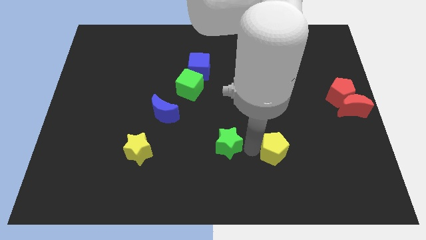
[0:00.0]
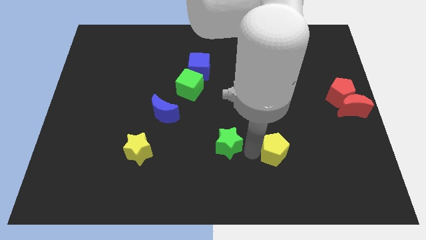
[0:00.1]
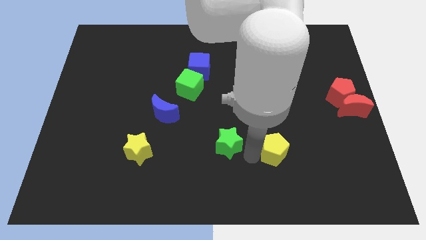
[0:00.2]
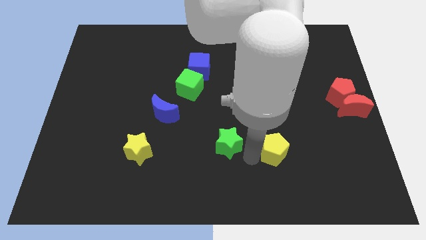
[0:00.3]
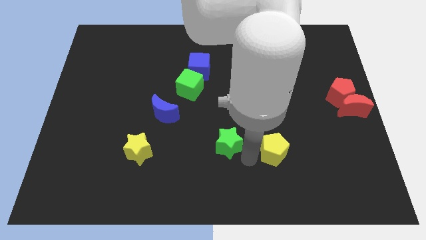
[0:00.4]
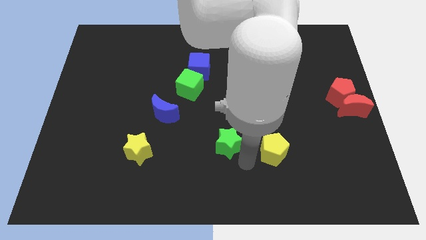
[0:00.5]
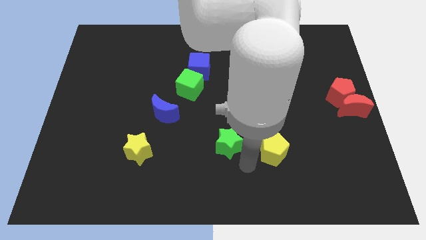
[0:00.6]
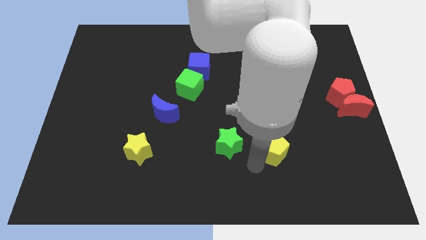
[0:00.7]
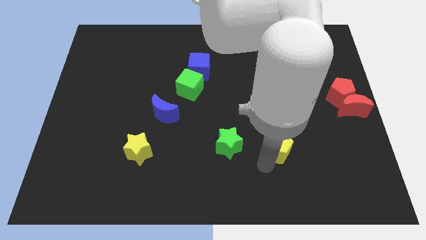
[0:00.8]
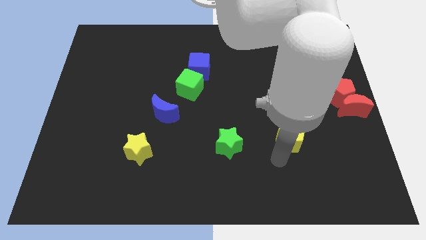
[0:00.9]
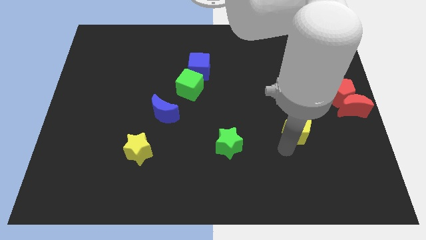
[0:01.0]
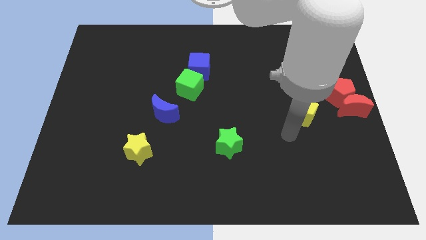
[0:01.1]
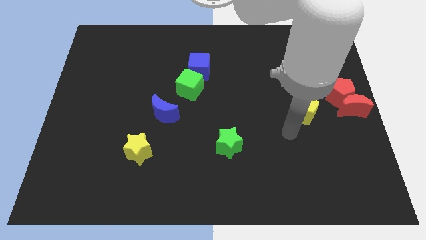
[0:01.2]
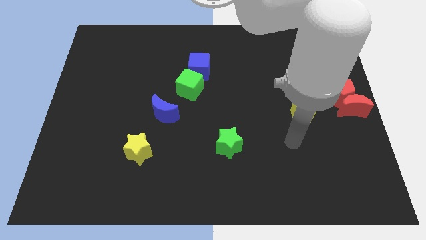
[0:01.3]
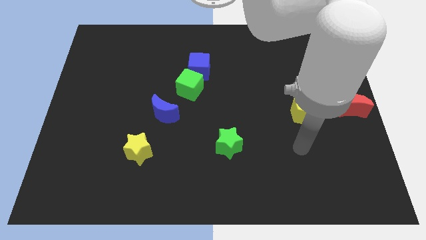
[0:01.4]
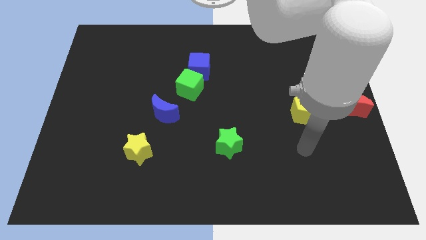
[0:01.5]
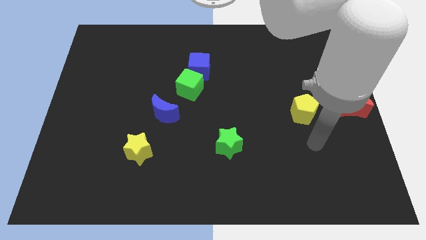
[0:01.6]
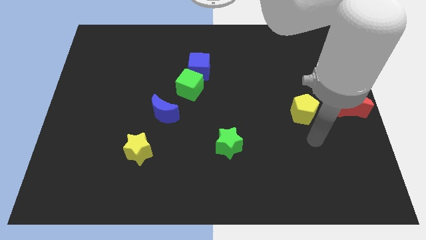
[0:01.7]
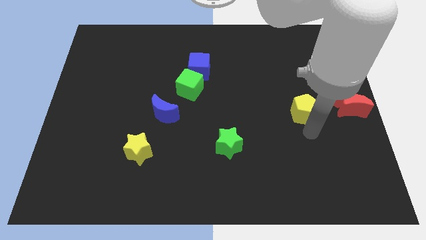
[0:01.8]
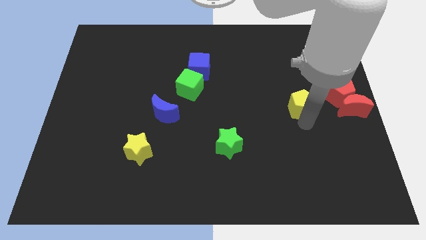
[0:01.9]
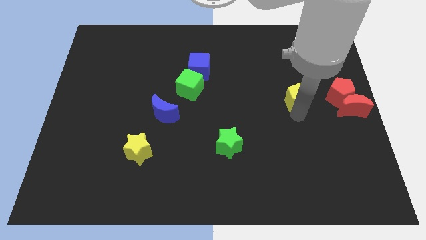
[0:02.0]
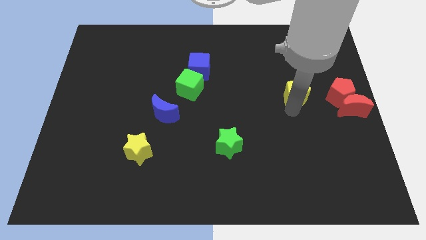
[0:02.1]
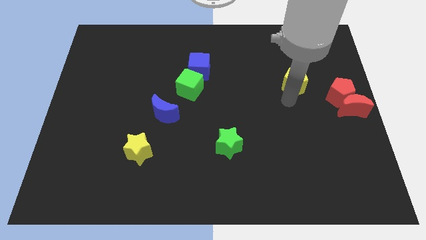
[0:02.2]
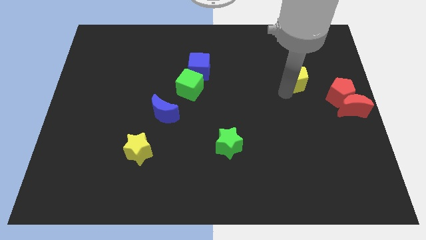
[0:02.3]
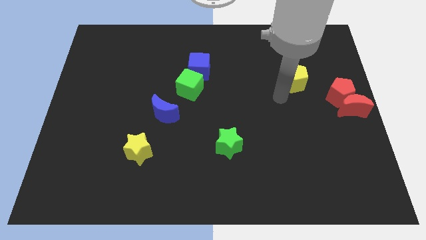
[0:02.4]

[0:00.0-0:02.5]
move the yellow pentagon on the left of the red blocks

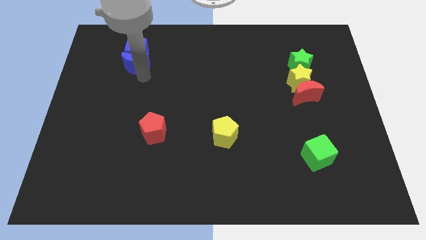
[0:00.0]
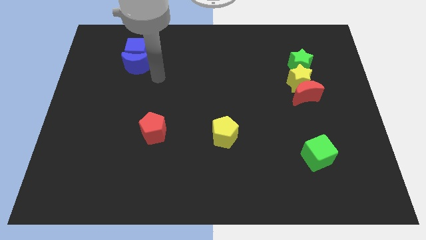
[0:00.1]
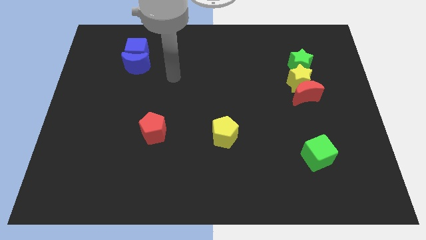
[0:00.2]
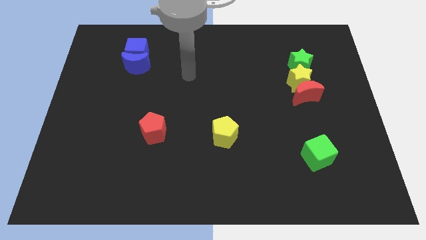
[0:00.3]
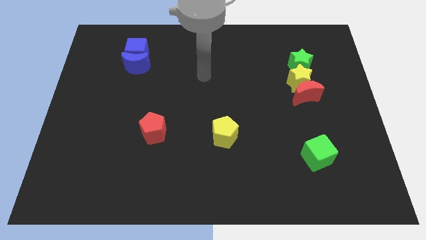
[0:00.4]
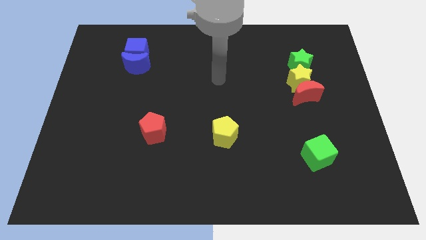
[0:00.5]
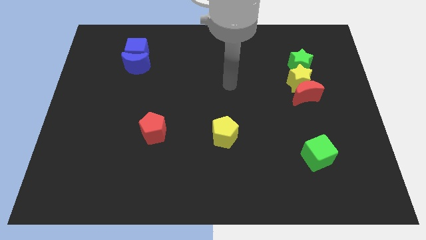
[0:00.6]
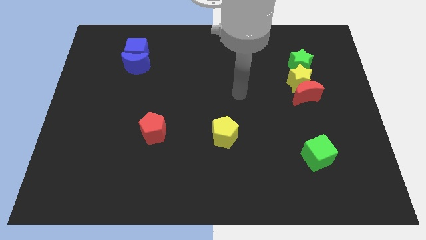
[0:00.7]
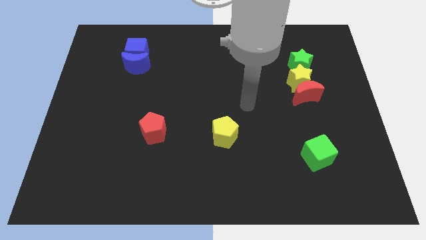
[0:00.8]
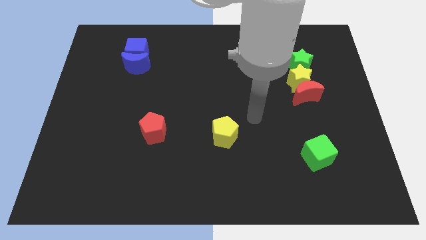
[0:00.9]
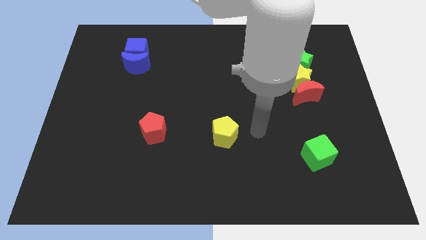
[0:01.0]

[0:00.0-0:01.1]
point your arm at the right of the yellow pentagon

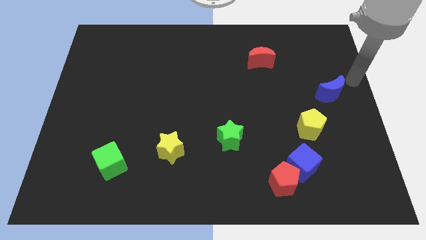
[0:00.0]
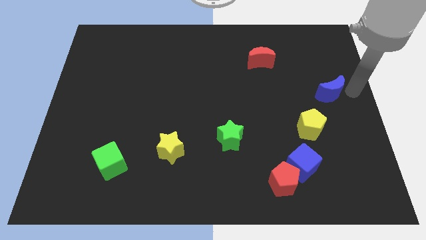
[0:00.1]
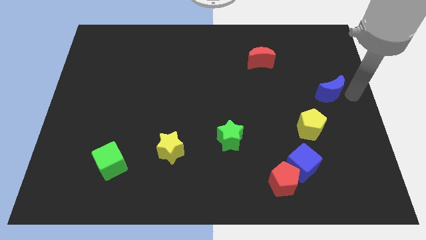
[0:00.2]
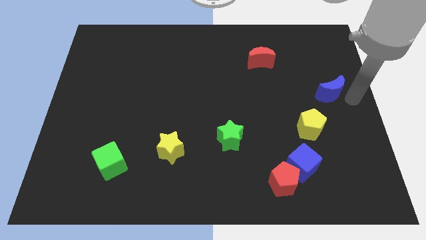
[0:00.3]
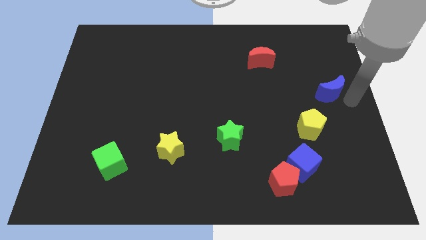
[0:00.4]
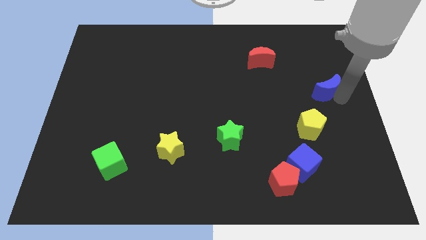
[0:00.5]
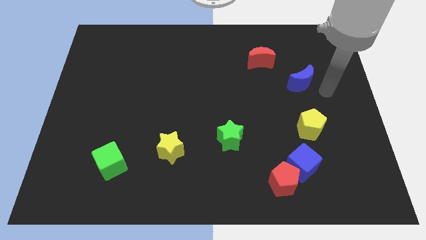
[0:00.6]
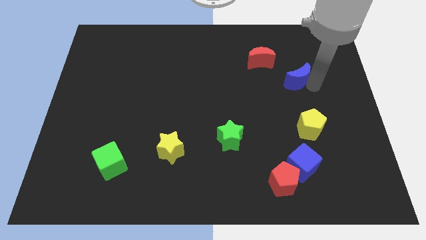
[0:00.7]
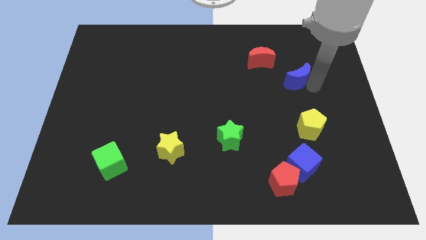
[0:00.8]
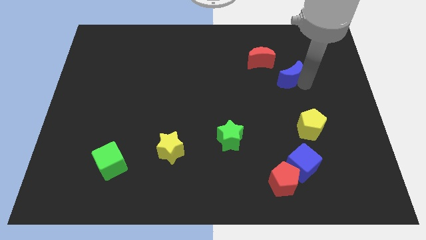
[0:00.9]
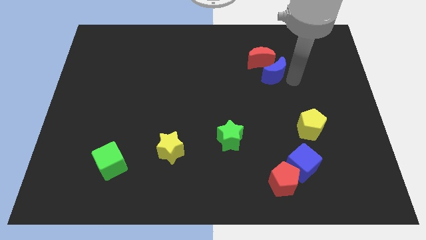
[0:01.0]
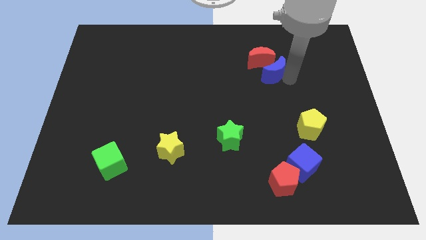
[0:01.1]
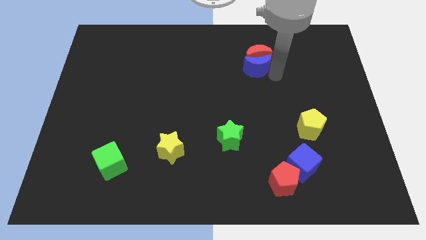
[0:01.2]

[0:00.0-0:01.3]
move the blue crescent to the bottom of the red crescent

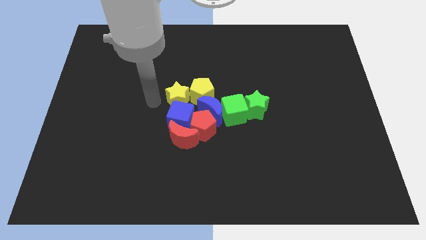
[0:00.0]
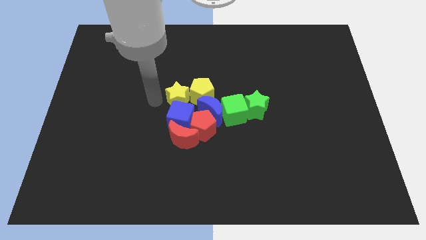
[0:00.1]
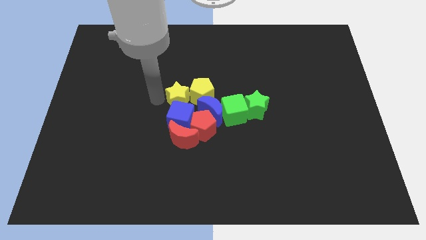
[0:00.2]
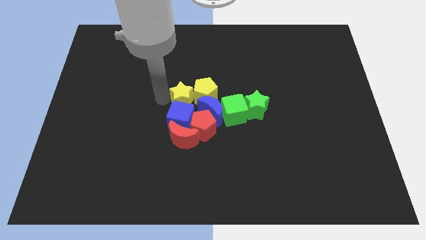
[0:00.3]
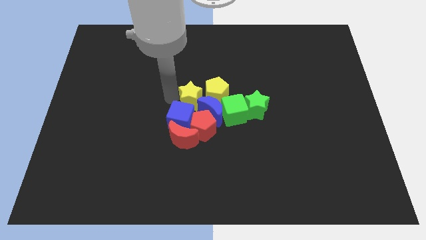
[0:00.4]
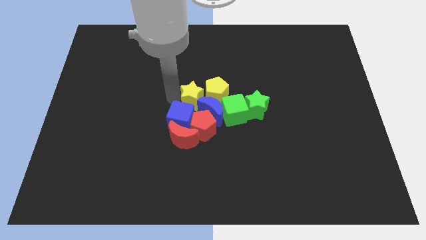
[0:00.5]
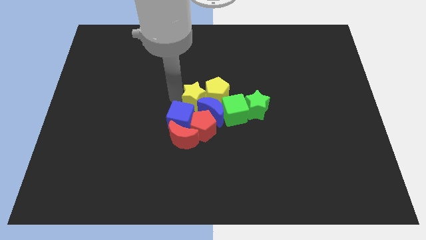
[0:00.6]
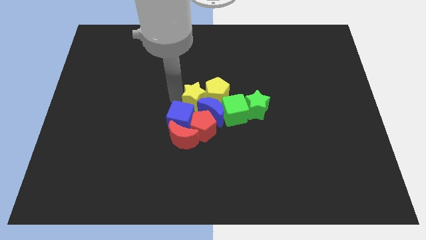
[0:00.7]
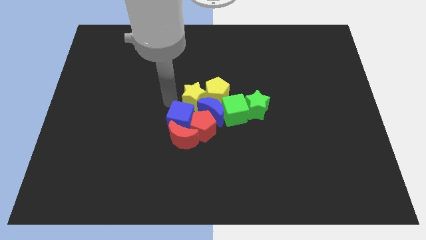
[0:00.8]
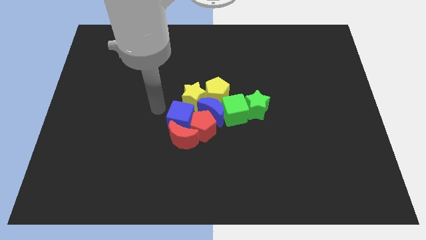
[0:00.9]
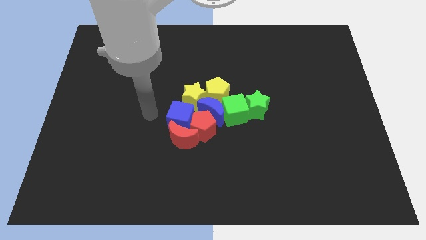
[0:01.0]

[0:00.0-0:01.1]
push the yellow blocks slightly to the right side

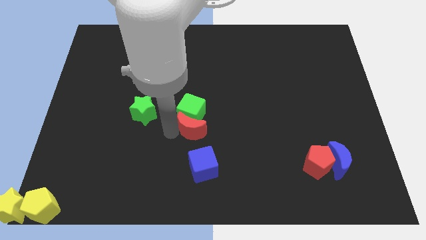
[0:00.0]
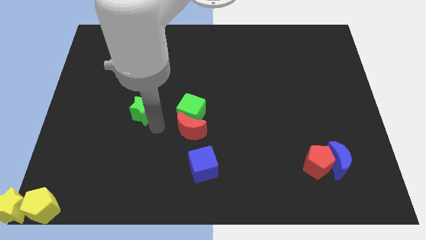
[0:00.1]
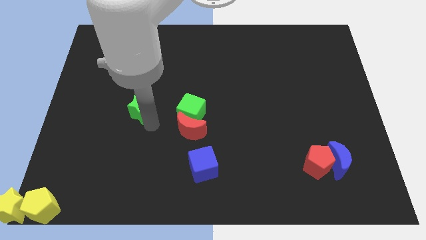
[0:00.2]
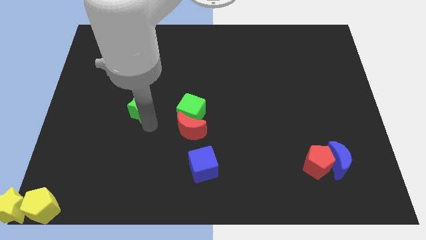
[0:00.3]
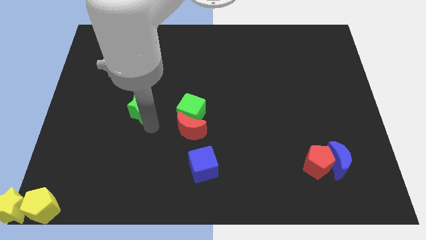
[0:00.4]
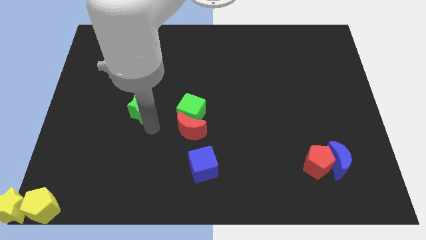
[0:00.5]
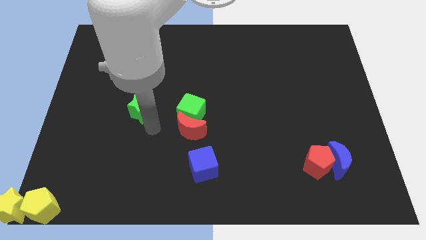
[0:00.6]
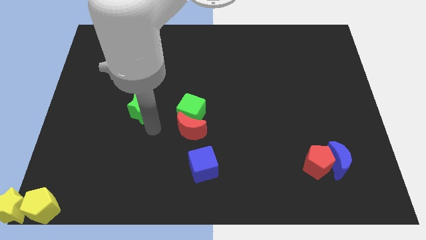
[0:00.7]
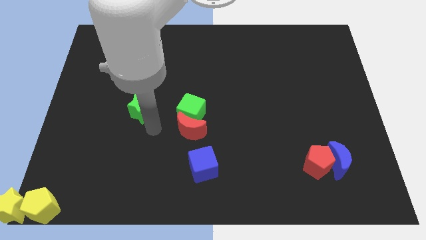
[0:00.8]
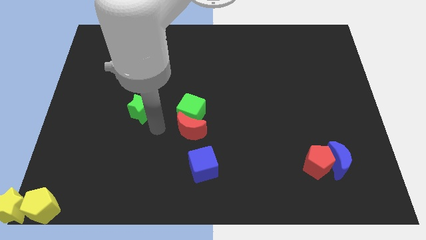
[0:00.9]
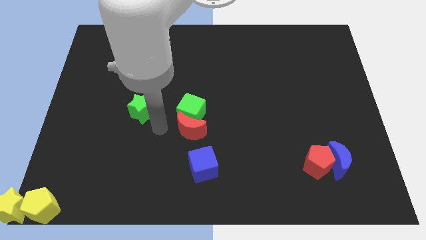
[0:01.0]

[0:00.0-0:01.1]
slightly push green star

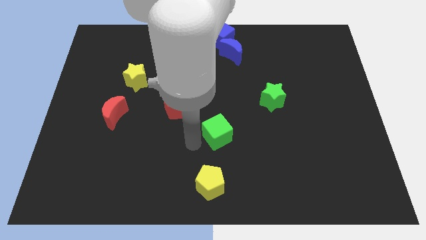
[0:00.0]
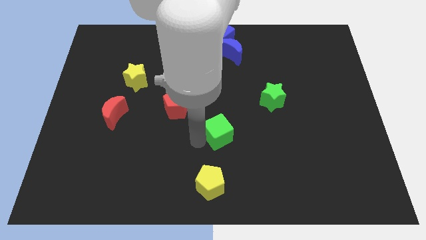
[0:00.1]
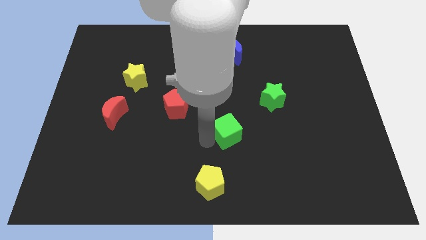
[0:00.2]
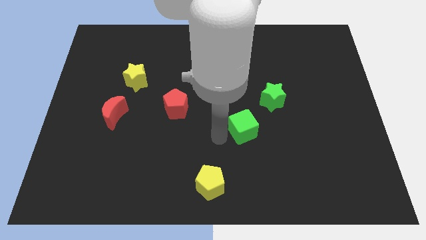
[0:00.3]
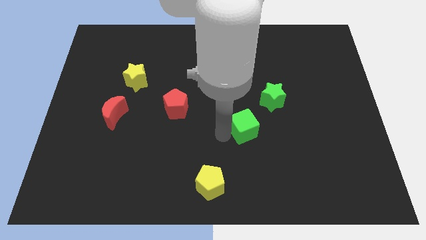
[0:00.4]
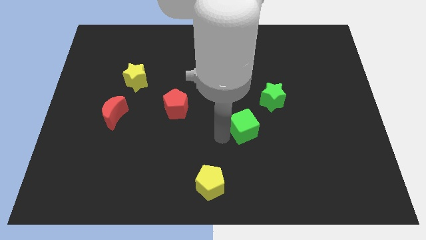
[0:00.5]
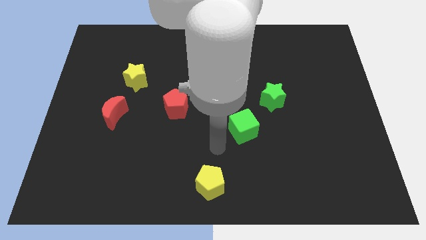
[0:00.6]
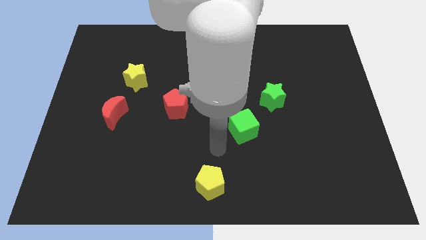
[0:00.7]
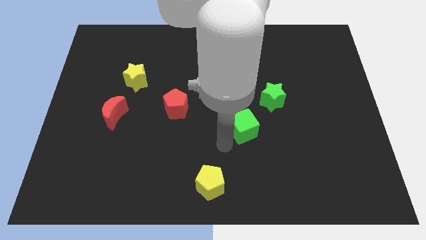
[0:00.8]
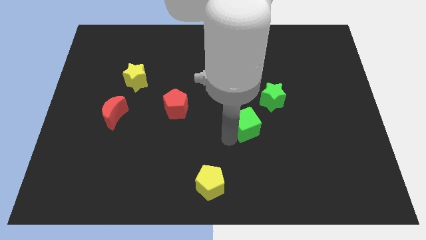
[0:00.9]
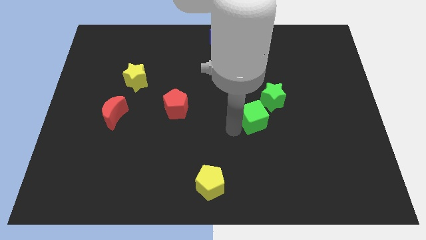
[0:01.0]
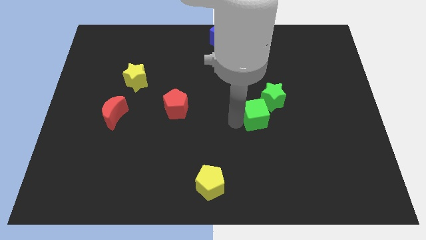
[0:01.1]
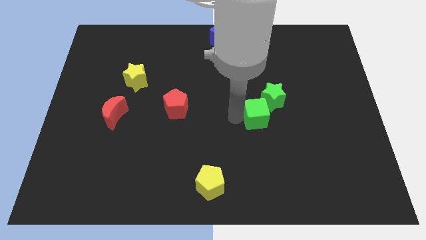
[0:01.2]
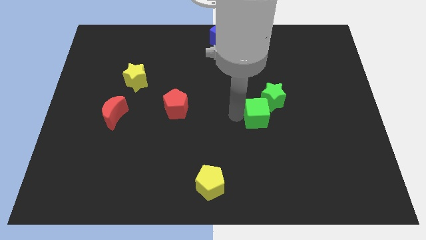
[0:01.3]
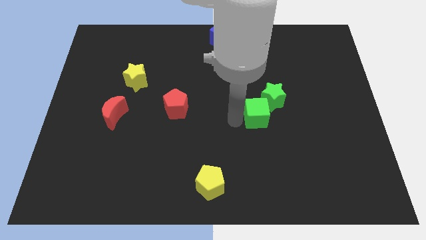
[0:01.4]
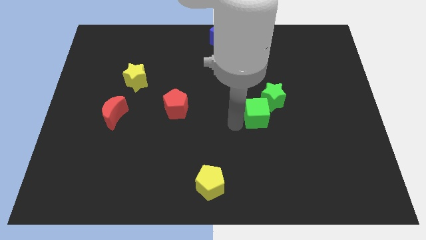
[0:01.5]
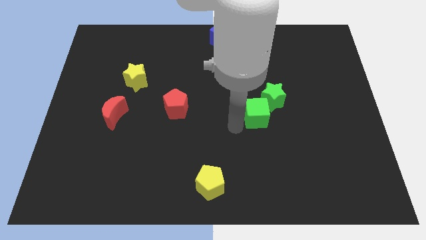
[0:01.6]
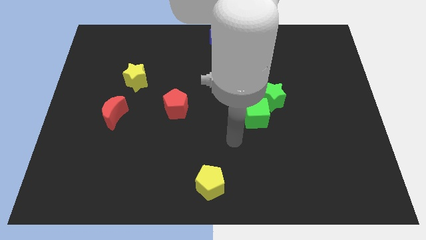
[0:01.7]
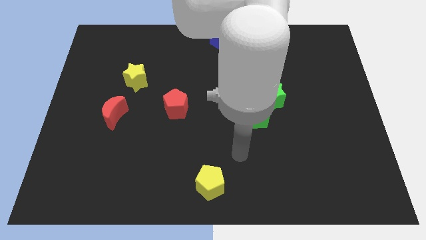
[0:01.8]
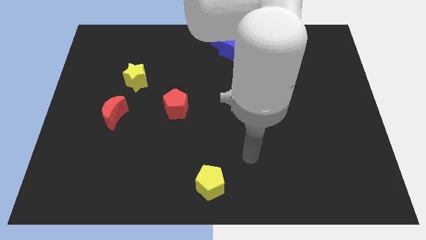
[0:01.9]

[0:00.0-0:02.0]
push green cube into green star
